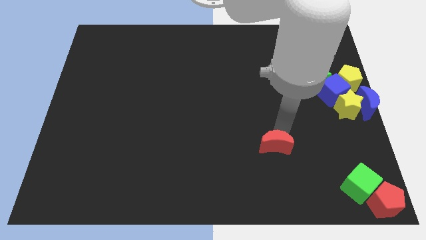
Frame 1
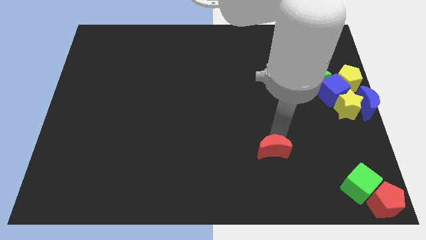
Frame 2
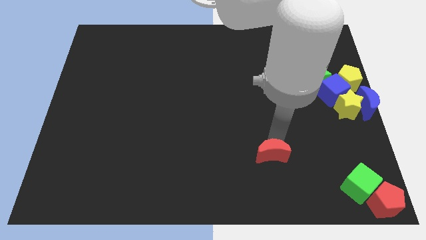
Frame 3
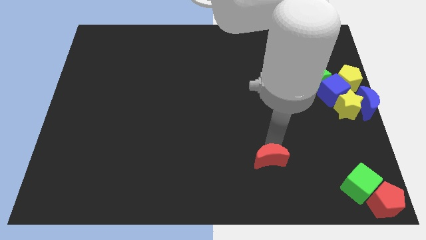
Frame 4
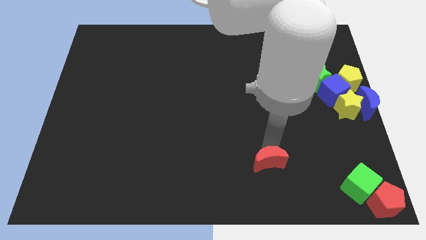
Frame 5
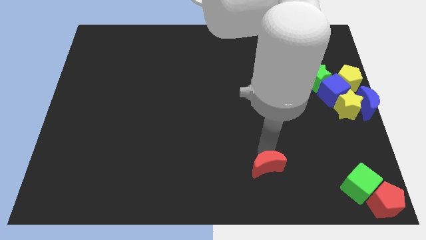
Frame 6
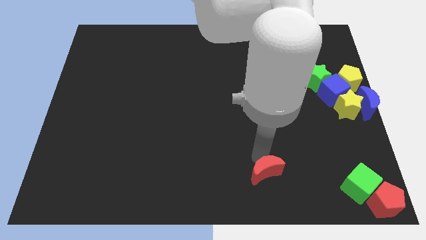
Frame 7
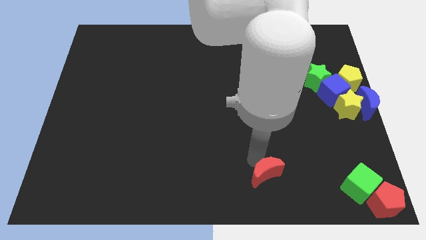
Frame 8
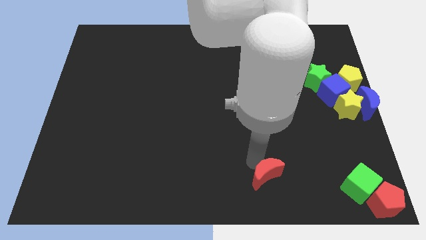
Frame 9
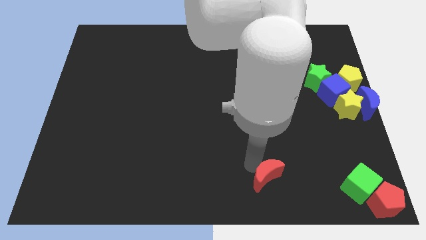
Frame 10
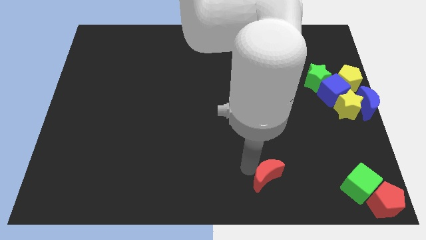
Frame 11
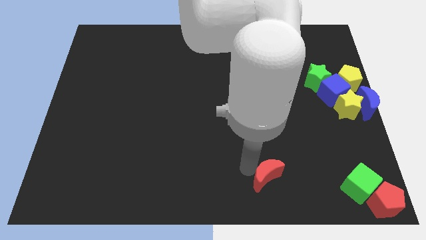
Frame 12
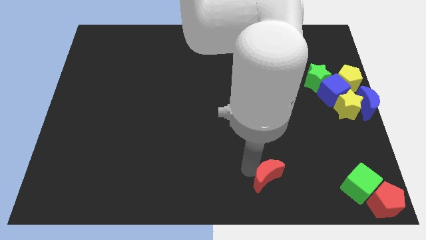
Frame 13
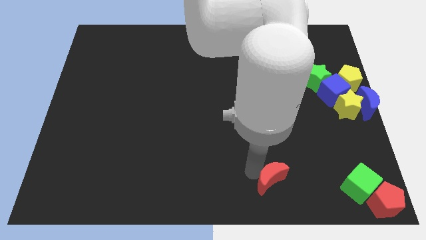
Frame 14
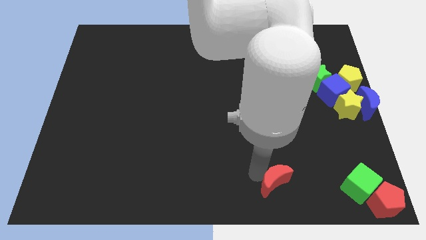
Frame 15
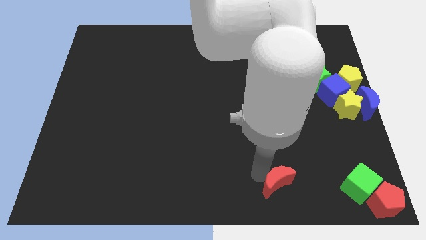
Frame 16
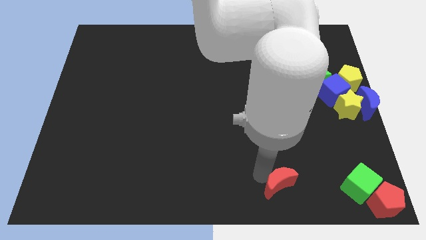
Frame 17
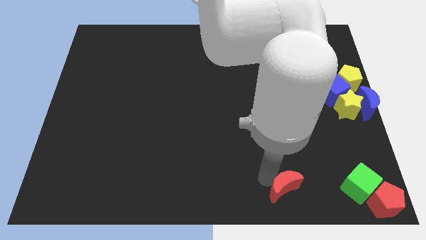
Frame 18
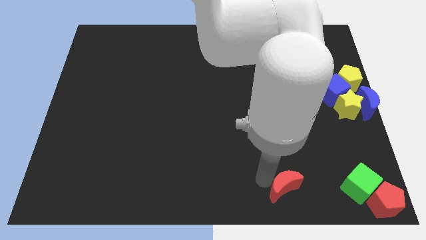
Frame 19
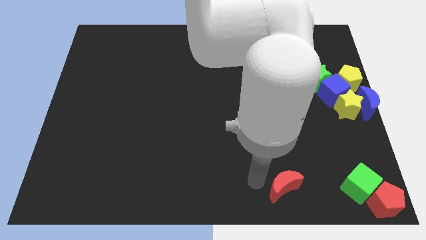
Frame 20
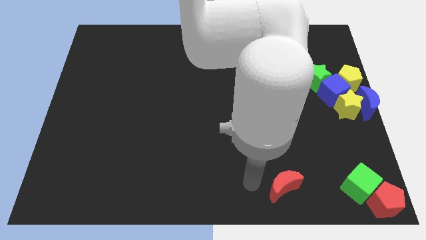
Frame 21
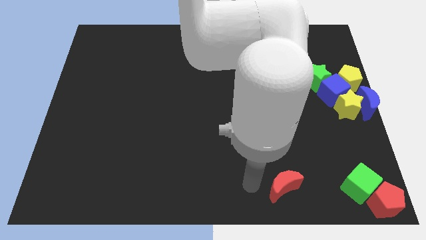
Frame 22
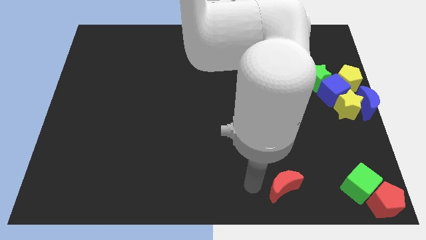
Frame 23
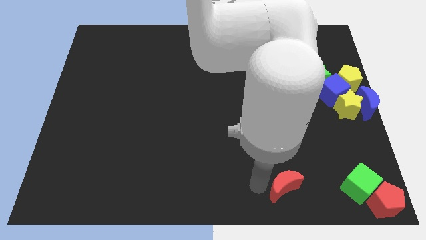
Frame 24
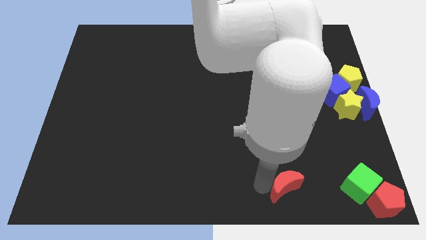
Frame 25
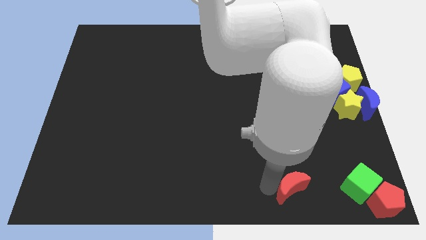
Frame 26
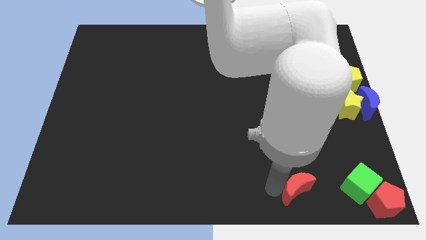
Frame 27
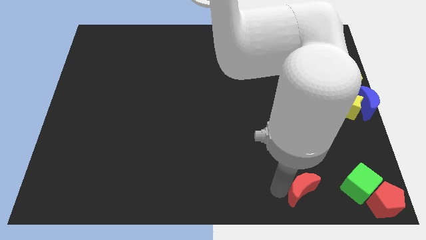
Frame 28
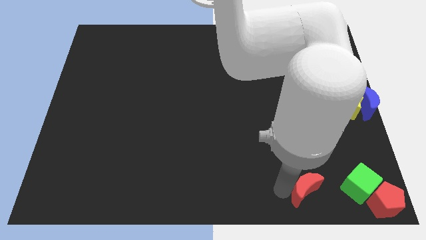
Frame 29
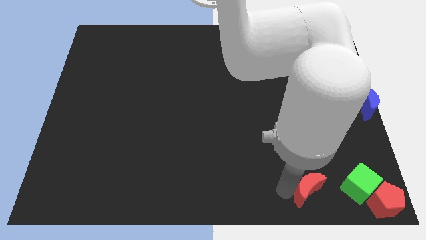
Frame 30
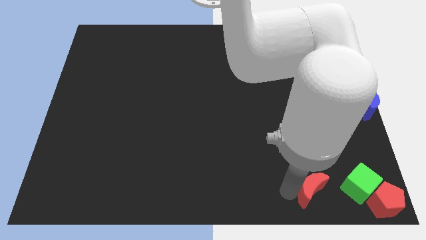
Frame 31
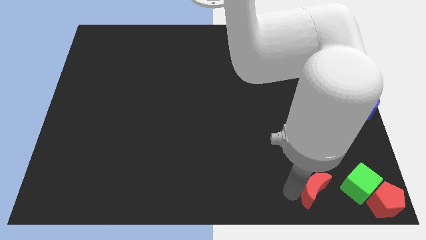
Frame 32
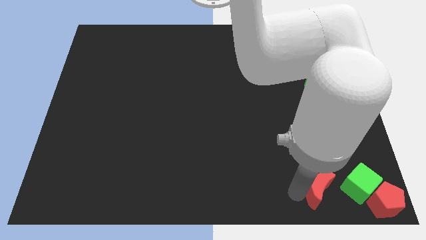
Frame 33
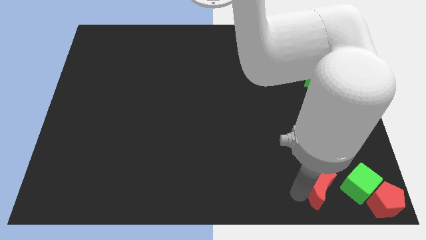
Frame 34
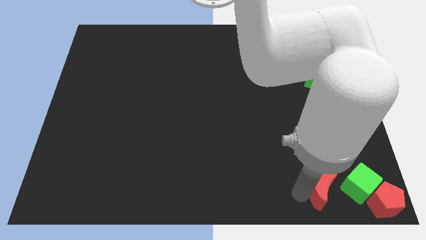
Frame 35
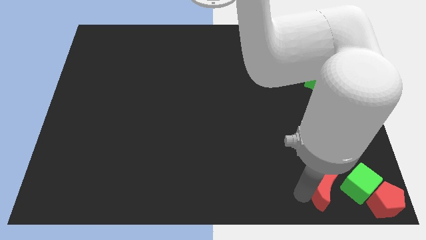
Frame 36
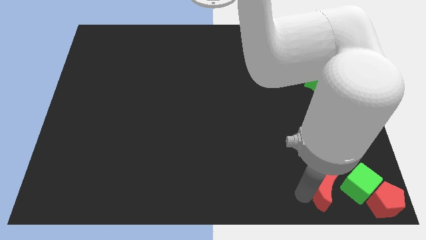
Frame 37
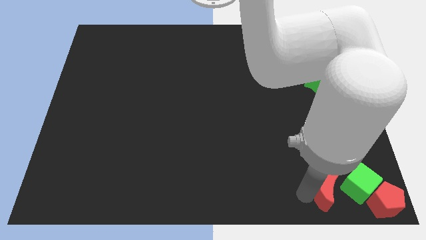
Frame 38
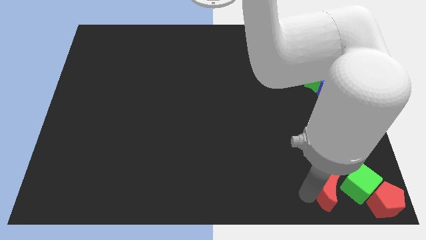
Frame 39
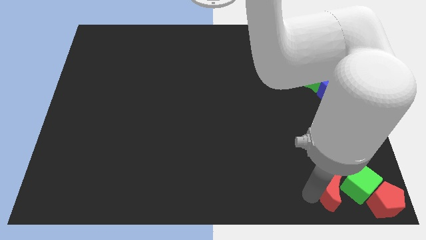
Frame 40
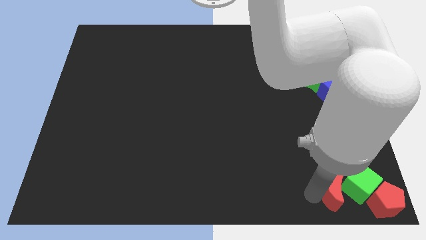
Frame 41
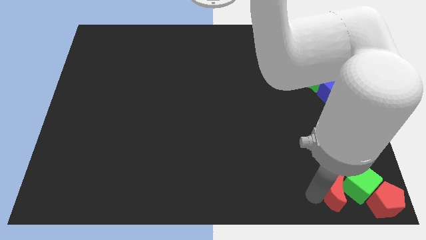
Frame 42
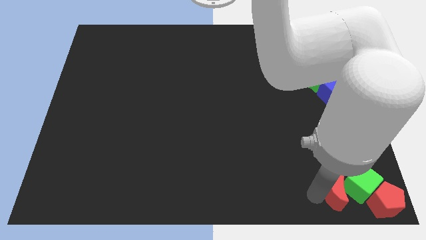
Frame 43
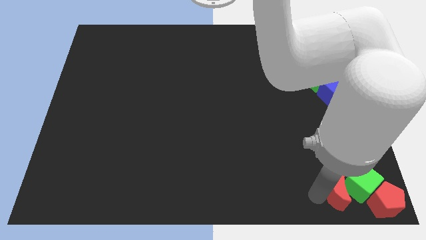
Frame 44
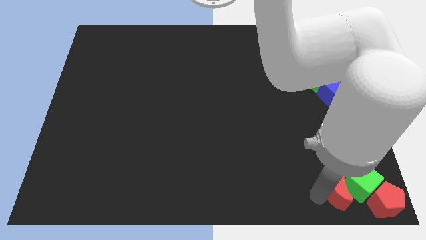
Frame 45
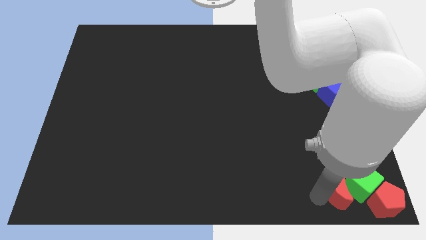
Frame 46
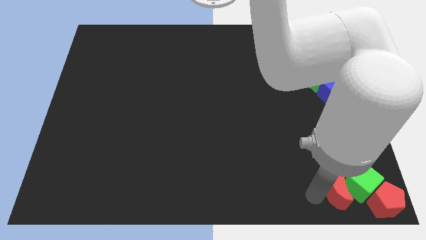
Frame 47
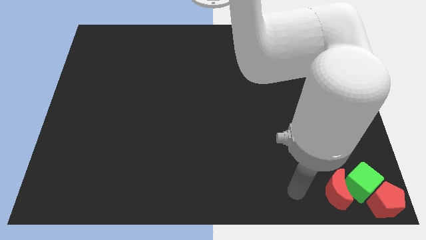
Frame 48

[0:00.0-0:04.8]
push the red crescent into the left of the green cube

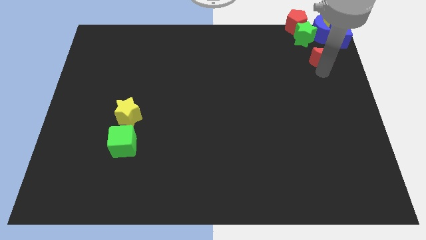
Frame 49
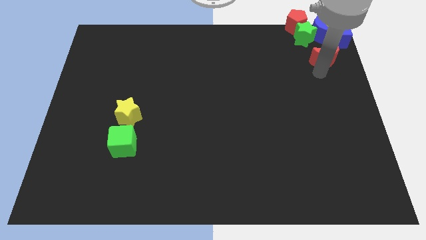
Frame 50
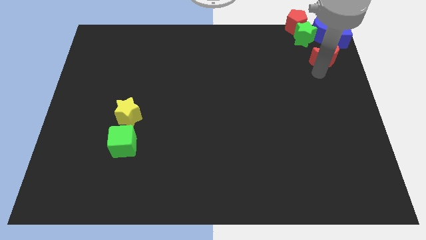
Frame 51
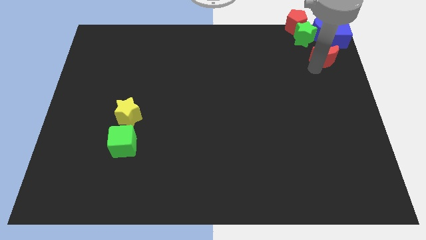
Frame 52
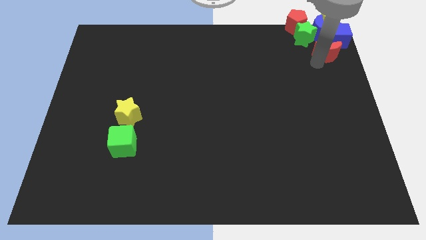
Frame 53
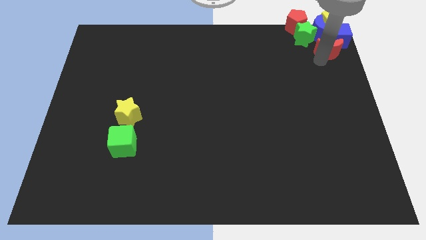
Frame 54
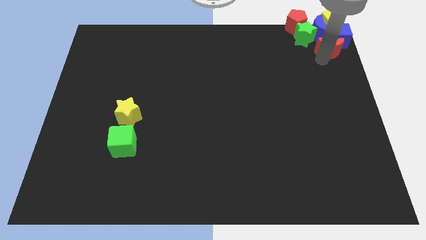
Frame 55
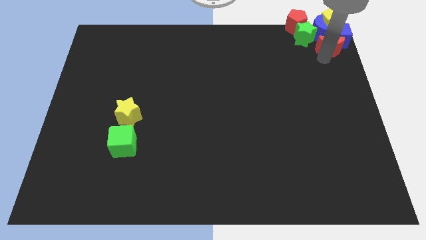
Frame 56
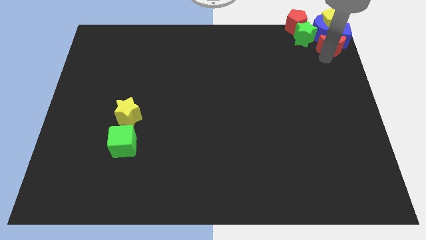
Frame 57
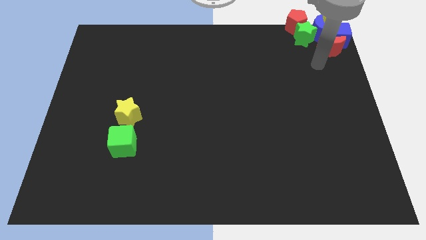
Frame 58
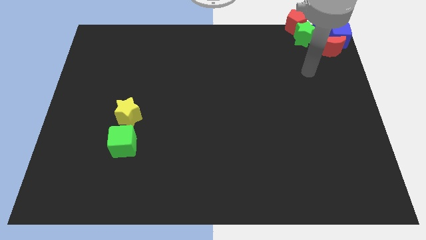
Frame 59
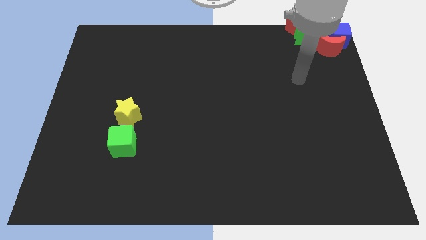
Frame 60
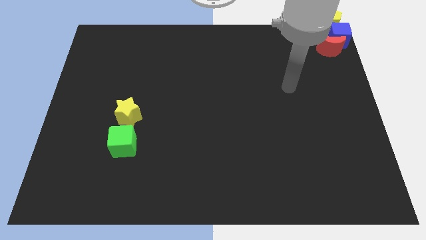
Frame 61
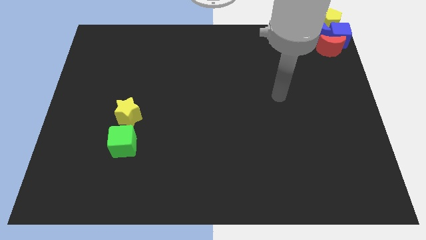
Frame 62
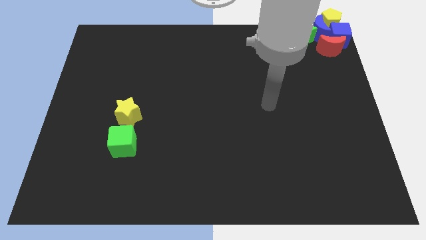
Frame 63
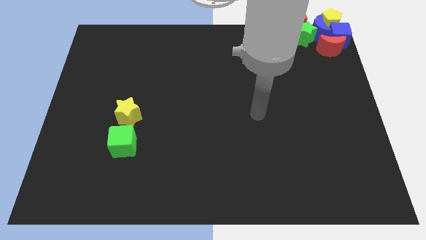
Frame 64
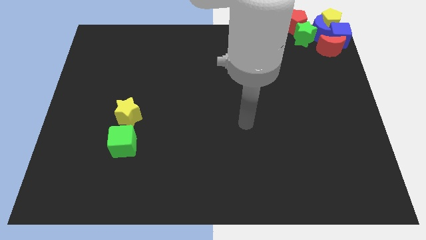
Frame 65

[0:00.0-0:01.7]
place the red crescent below the blue blocks

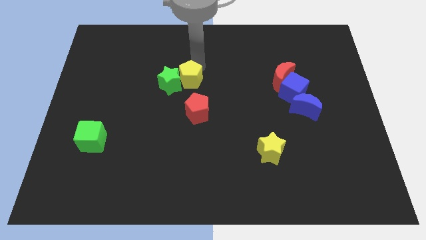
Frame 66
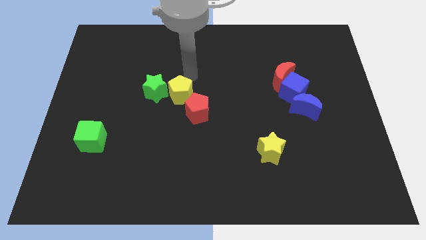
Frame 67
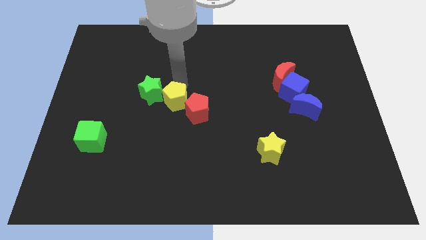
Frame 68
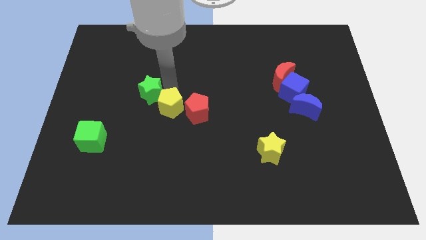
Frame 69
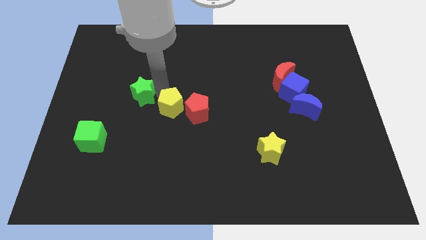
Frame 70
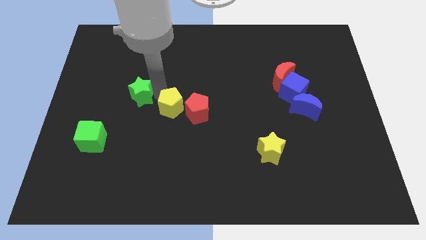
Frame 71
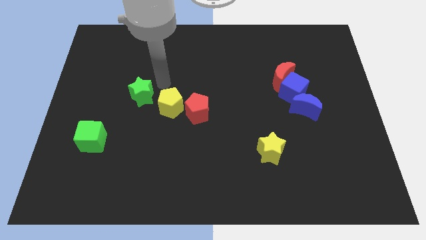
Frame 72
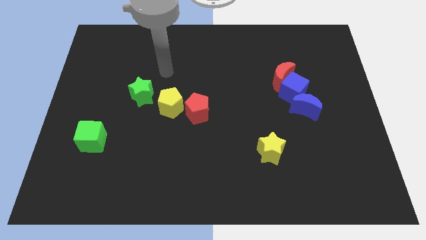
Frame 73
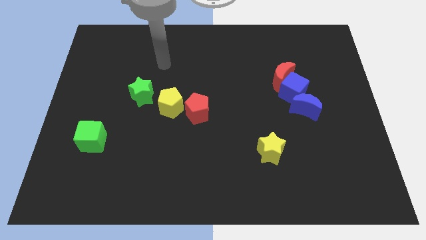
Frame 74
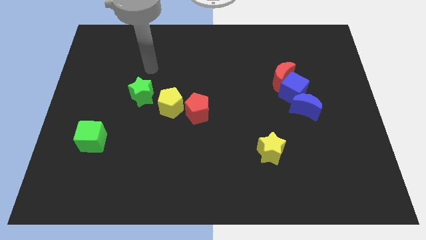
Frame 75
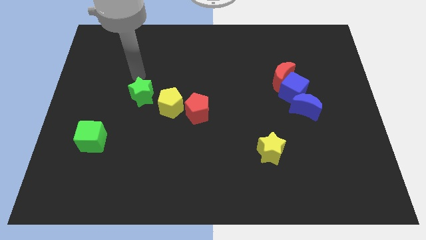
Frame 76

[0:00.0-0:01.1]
move the yellow pentagon to the left of the red pentagon

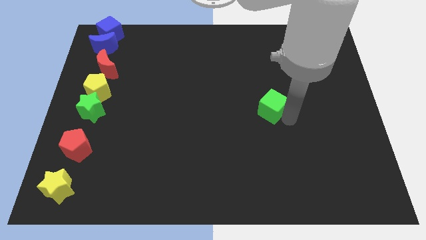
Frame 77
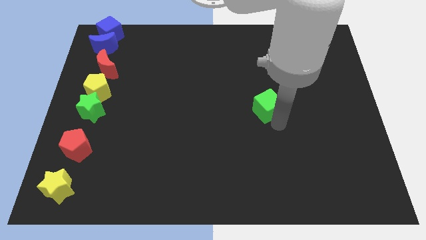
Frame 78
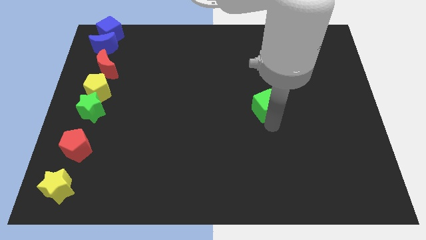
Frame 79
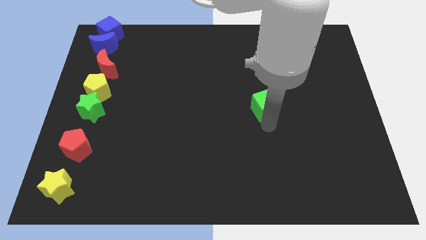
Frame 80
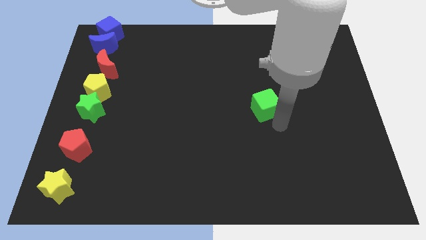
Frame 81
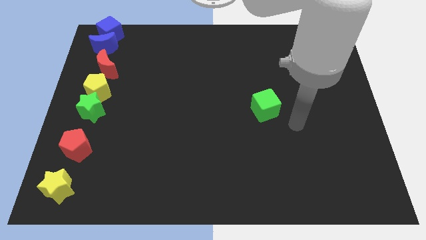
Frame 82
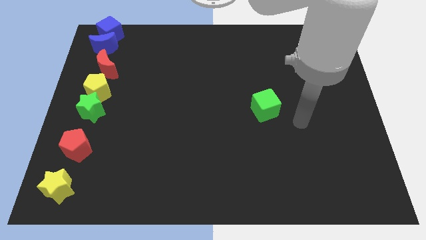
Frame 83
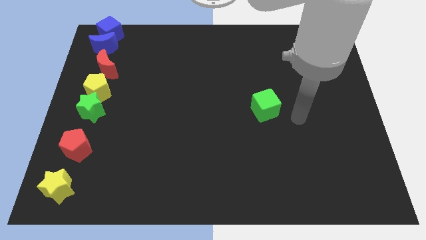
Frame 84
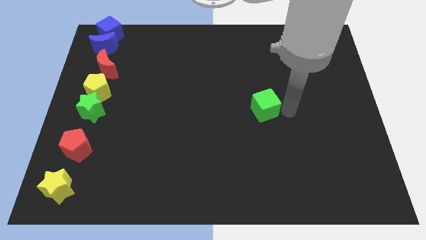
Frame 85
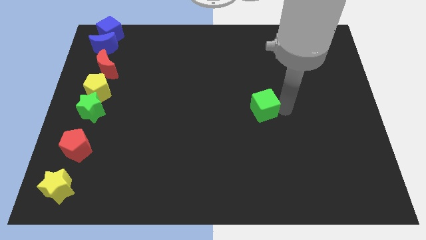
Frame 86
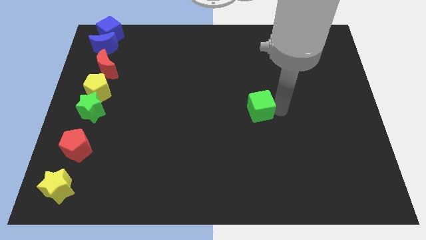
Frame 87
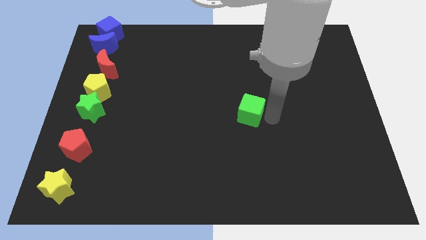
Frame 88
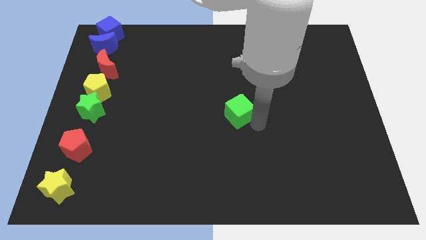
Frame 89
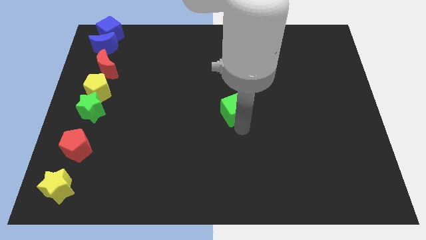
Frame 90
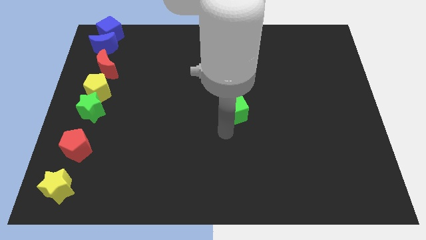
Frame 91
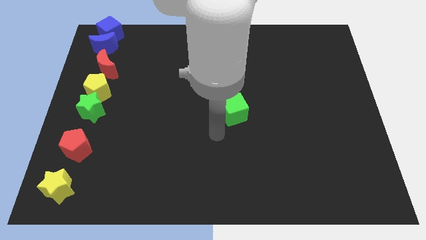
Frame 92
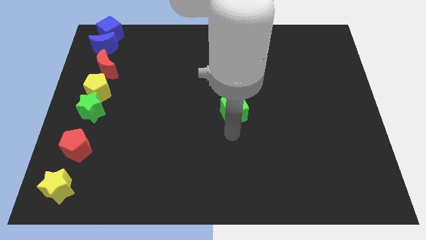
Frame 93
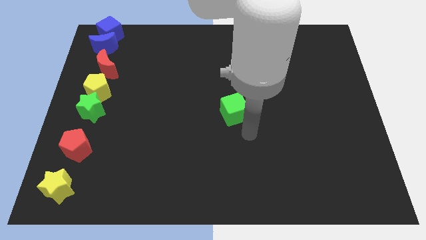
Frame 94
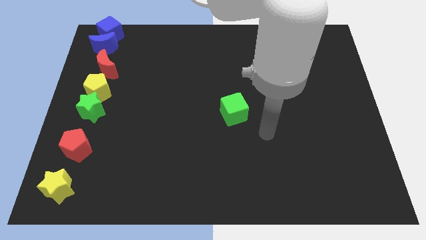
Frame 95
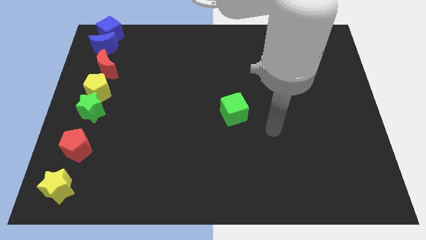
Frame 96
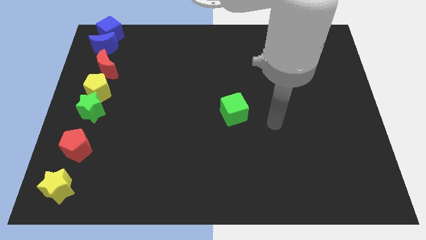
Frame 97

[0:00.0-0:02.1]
slifde the green cube toeards the left
